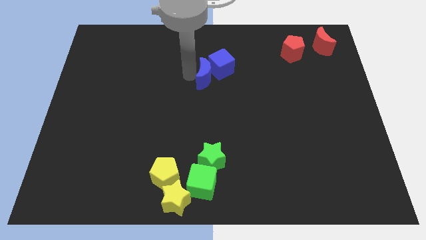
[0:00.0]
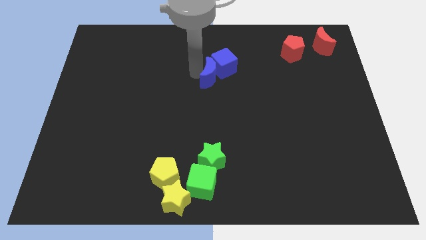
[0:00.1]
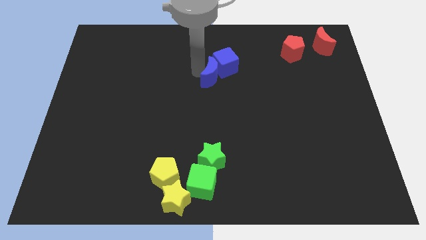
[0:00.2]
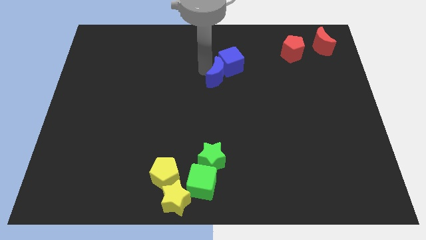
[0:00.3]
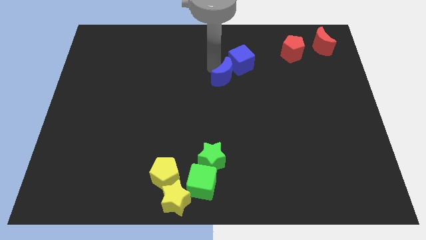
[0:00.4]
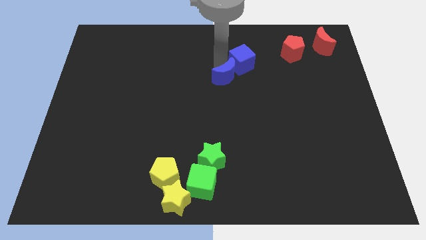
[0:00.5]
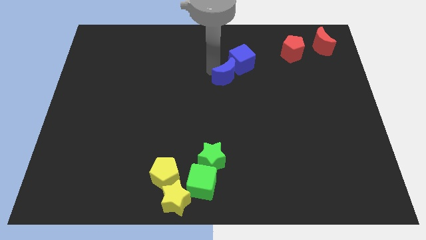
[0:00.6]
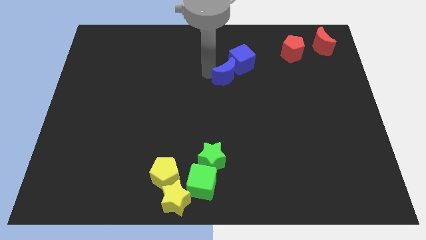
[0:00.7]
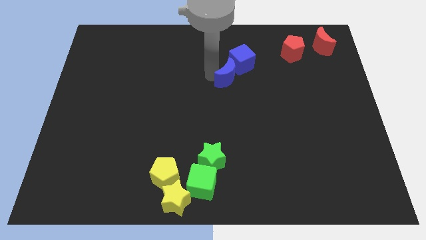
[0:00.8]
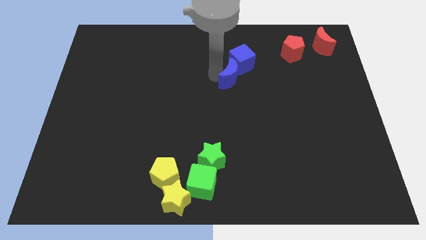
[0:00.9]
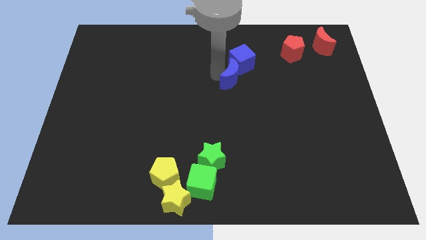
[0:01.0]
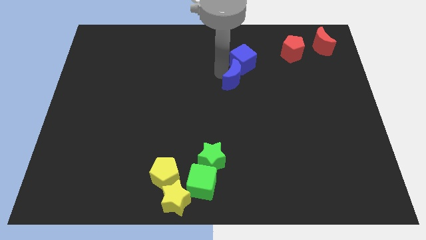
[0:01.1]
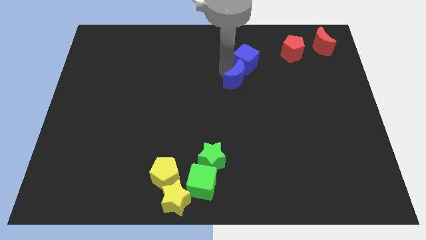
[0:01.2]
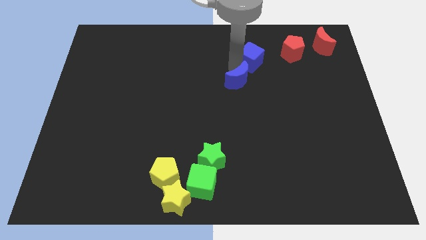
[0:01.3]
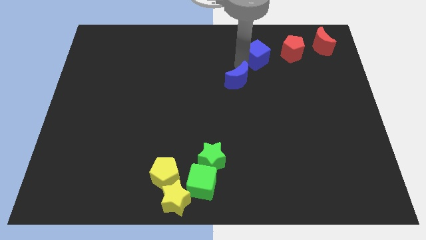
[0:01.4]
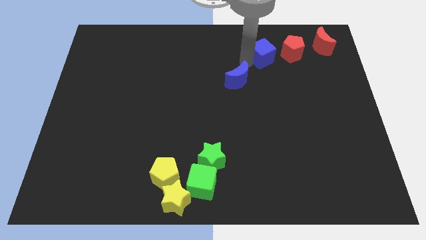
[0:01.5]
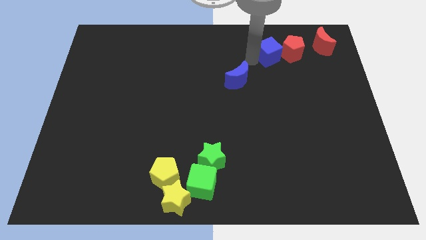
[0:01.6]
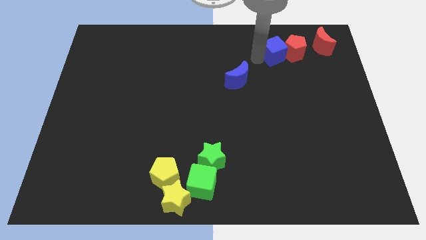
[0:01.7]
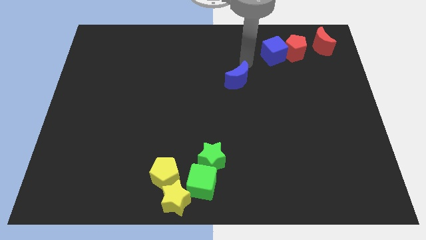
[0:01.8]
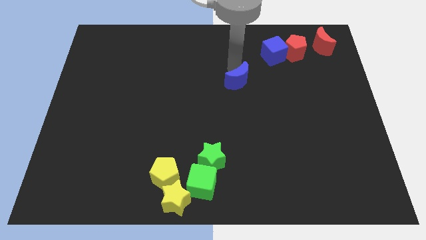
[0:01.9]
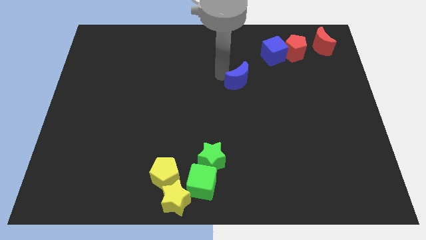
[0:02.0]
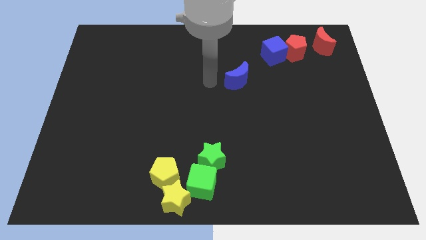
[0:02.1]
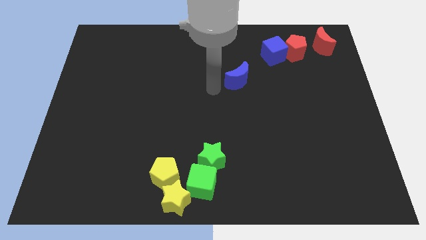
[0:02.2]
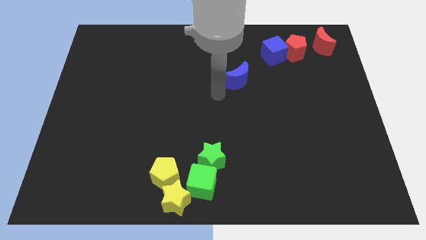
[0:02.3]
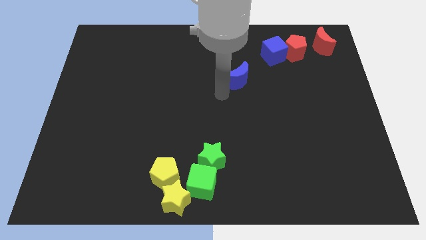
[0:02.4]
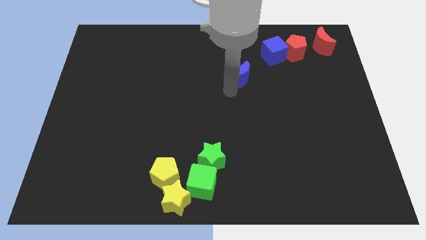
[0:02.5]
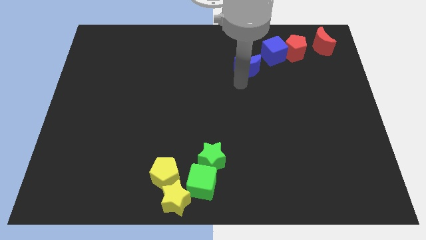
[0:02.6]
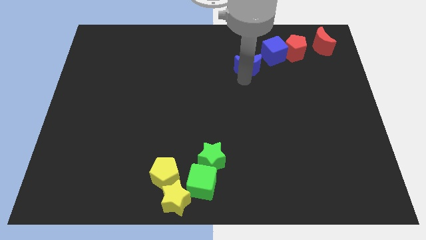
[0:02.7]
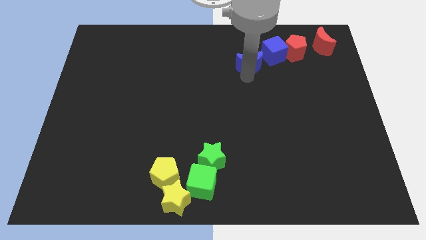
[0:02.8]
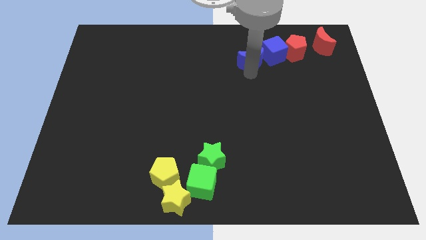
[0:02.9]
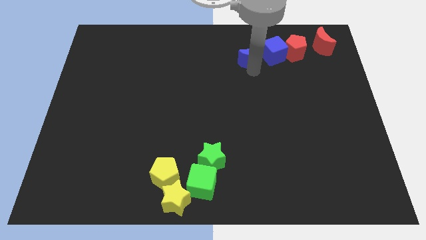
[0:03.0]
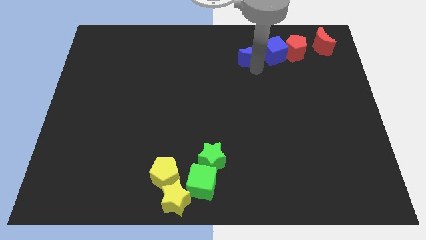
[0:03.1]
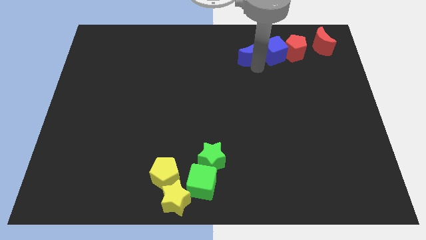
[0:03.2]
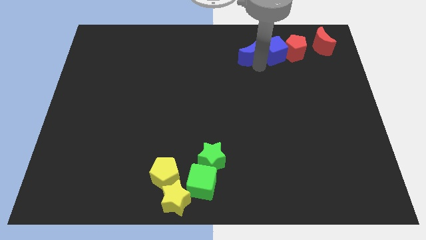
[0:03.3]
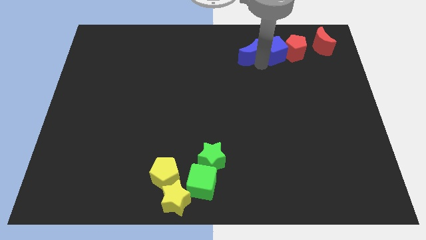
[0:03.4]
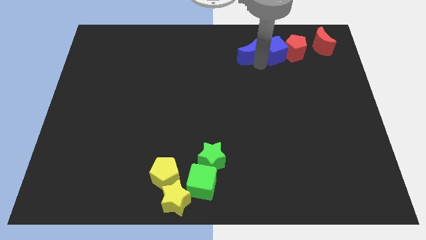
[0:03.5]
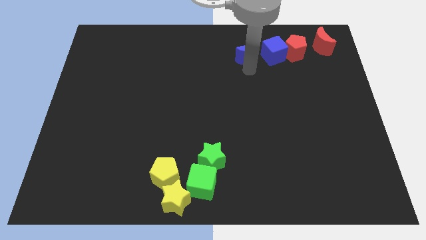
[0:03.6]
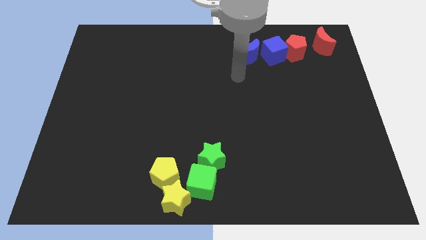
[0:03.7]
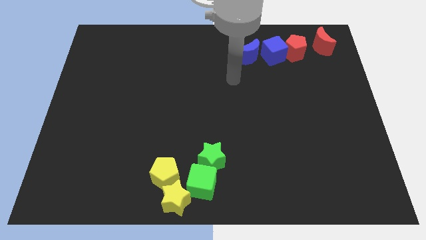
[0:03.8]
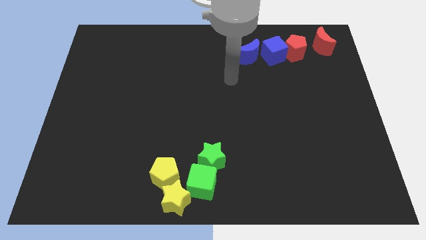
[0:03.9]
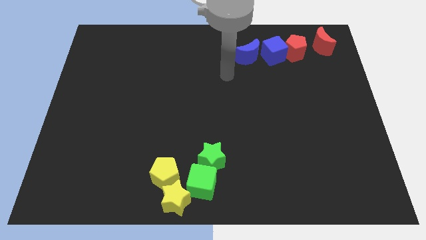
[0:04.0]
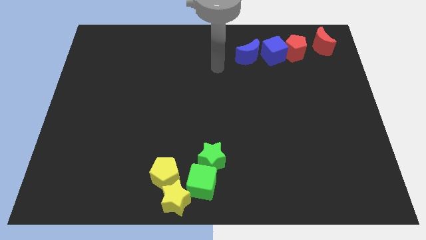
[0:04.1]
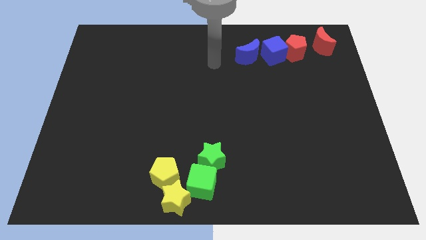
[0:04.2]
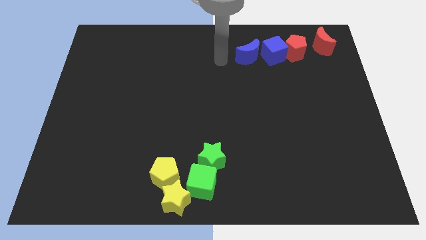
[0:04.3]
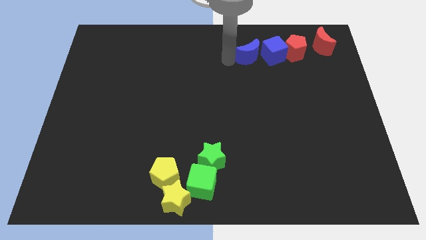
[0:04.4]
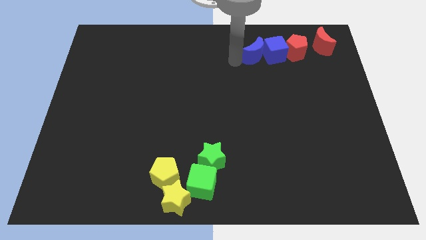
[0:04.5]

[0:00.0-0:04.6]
move blue blocks towards top right corner of the board

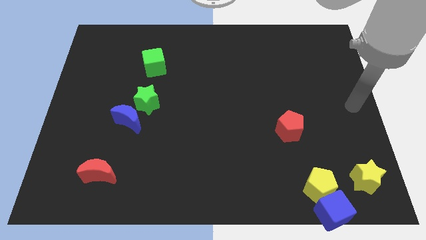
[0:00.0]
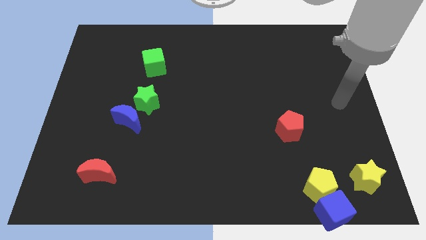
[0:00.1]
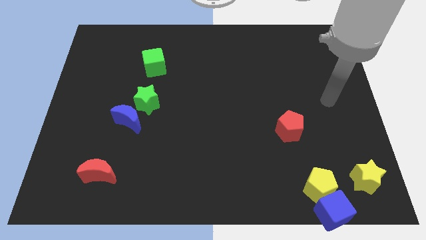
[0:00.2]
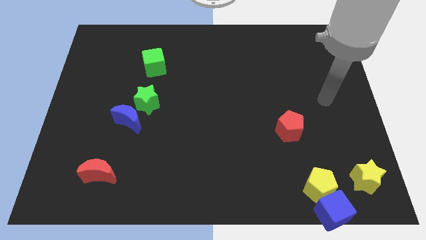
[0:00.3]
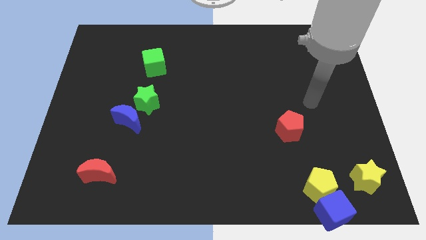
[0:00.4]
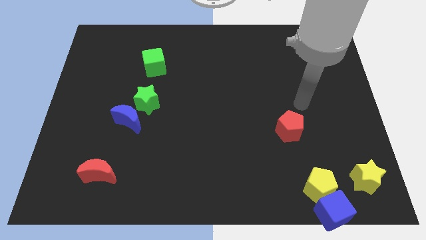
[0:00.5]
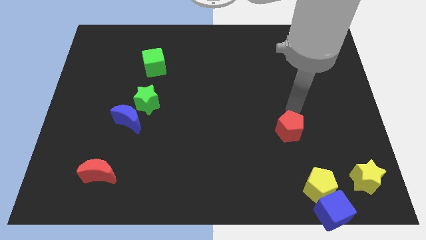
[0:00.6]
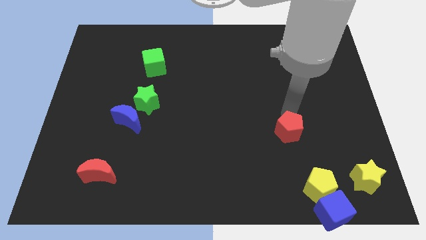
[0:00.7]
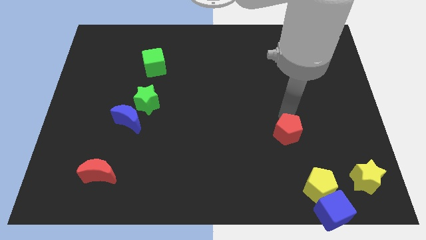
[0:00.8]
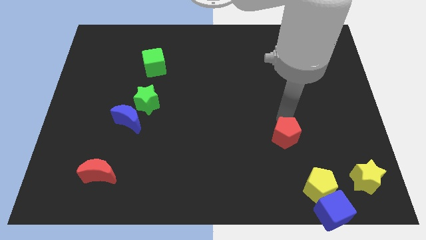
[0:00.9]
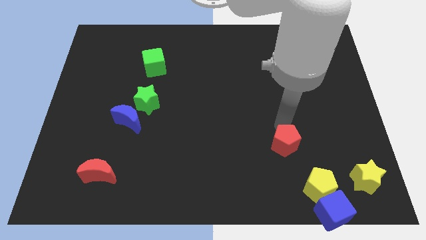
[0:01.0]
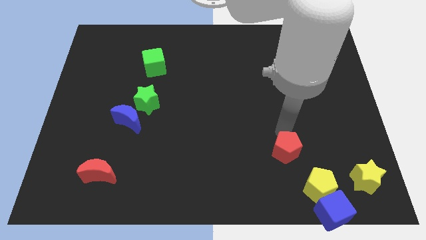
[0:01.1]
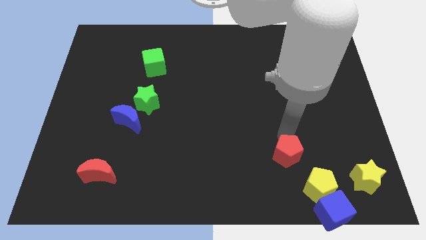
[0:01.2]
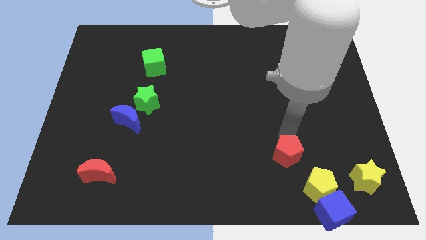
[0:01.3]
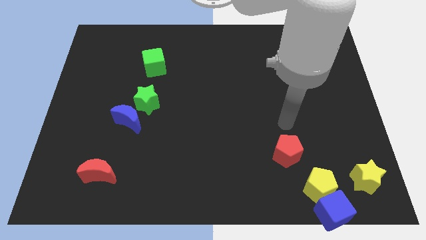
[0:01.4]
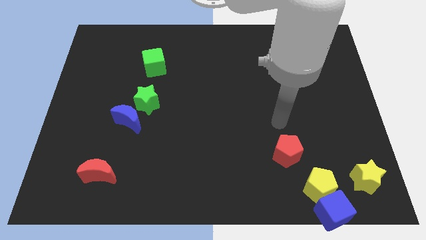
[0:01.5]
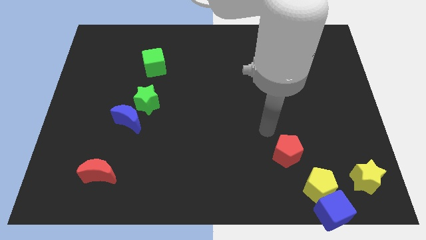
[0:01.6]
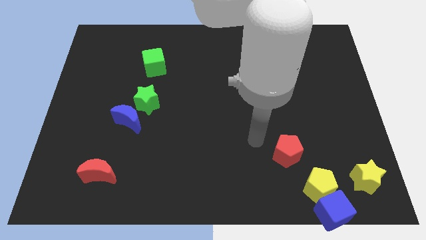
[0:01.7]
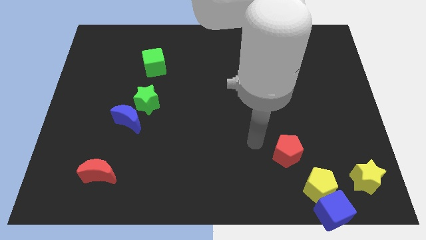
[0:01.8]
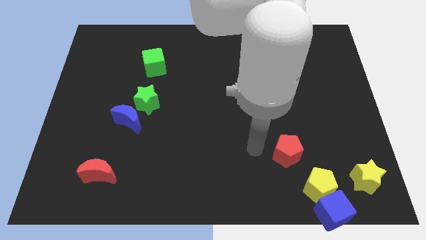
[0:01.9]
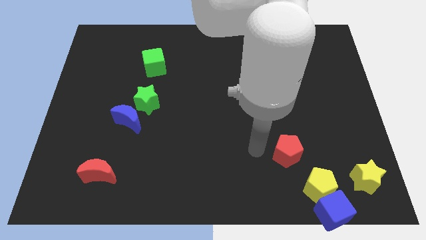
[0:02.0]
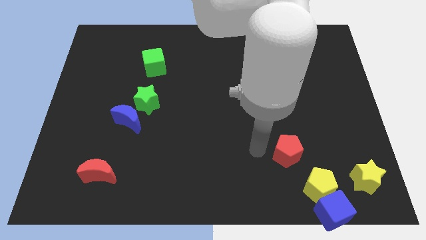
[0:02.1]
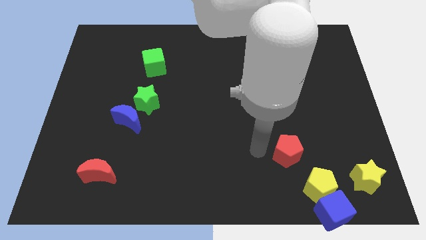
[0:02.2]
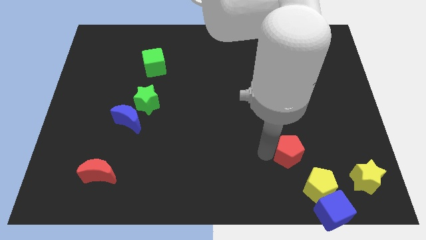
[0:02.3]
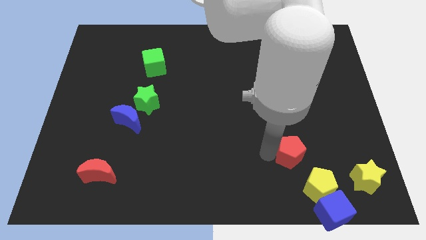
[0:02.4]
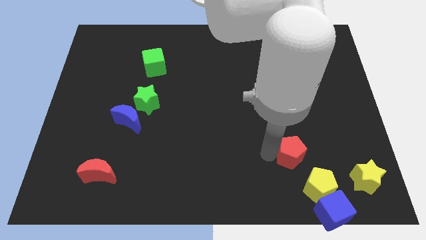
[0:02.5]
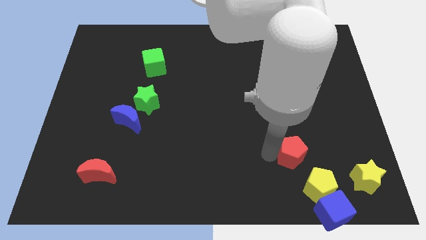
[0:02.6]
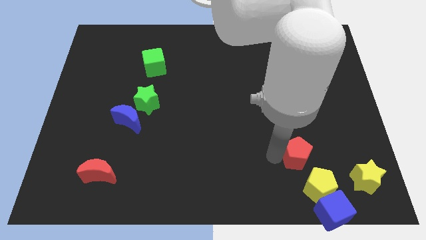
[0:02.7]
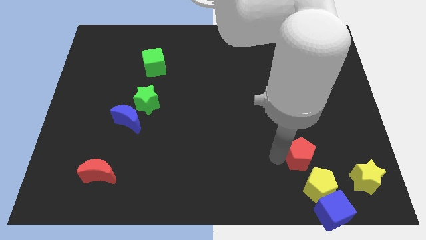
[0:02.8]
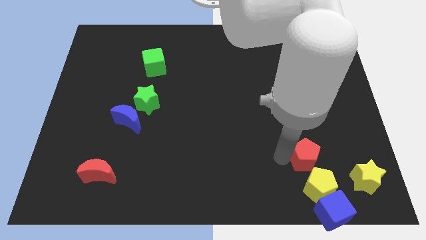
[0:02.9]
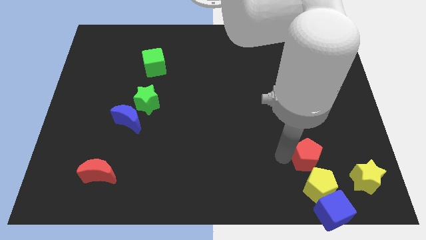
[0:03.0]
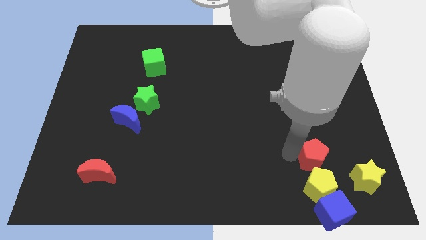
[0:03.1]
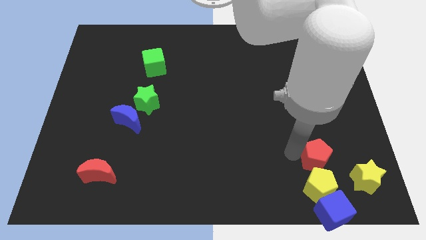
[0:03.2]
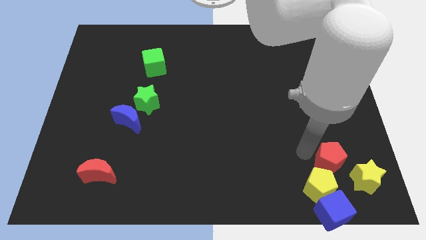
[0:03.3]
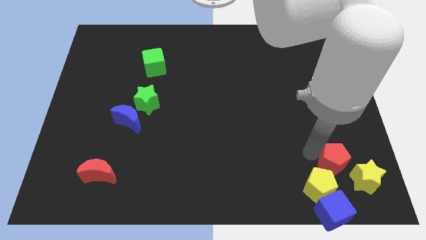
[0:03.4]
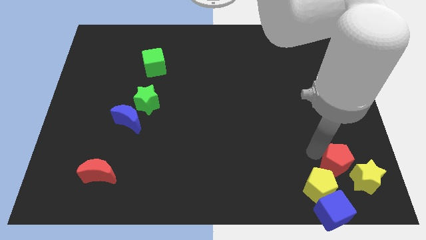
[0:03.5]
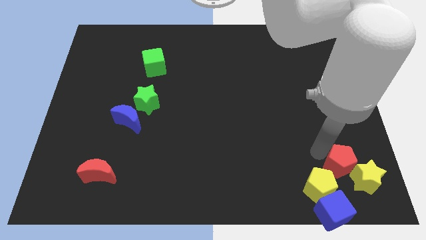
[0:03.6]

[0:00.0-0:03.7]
push the red pentagon into yellow blocks

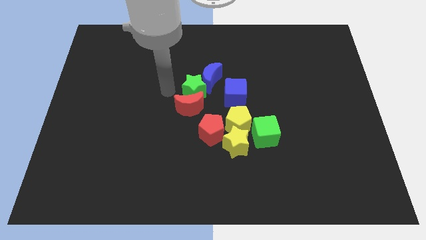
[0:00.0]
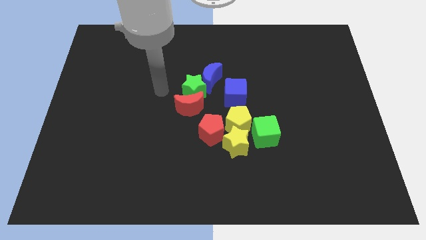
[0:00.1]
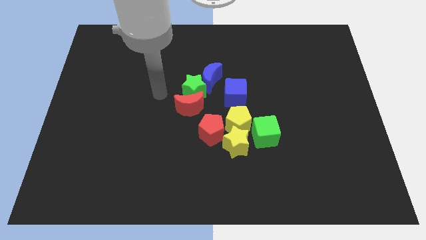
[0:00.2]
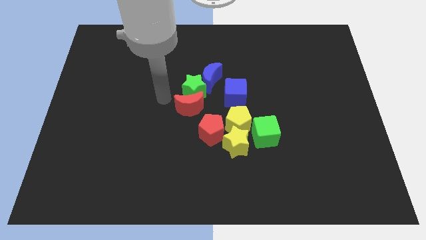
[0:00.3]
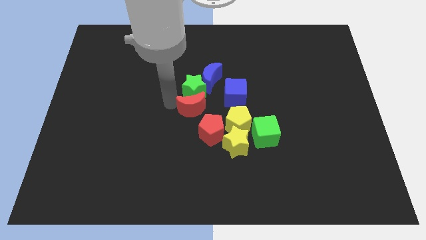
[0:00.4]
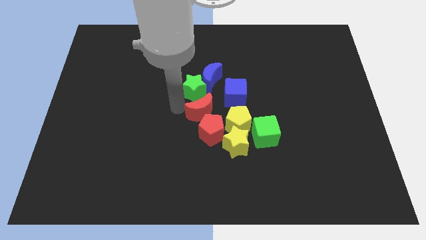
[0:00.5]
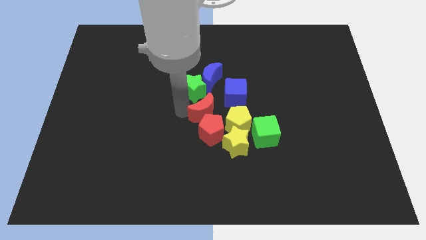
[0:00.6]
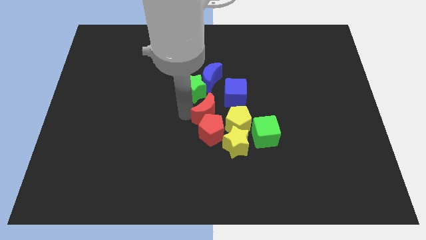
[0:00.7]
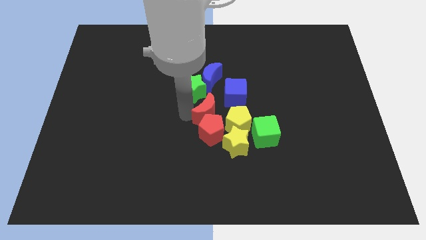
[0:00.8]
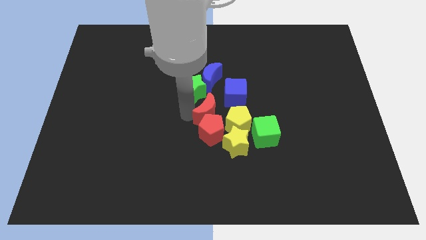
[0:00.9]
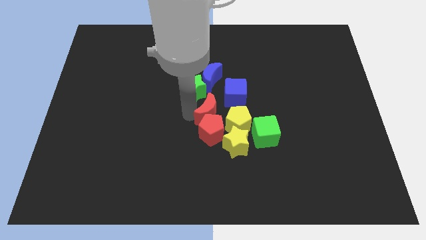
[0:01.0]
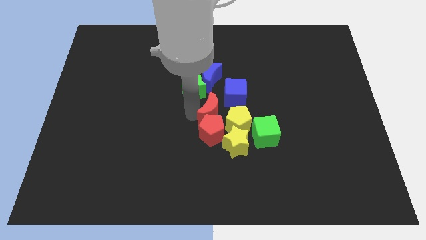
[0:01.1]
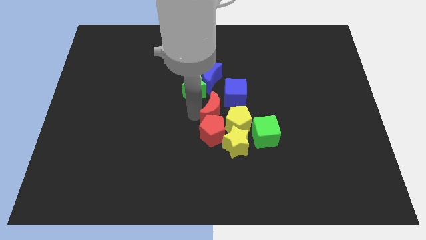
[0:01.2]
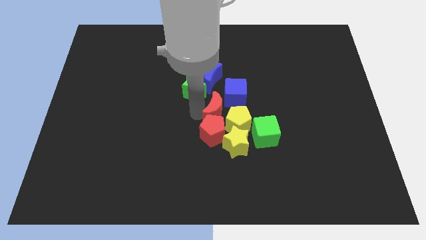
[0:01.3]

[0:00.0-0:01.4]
push the red moon into the red pentagon
